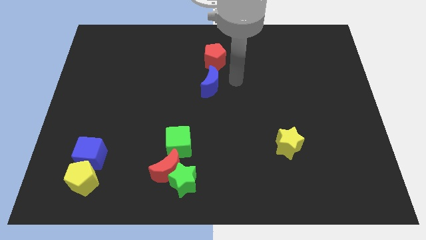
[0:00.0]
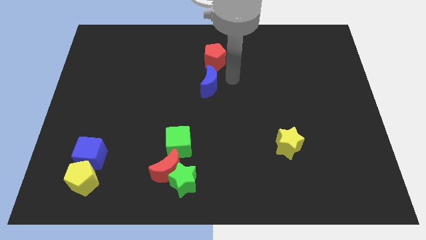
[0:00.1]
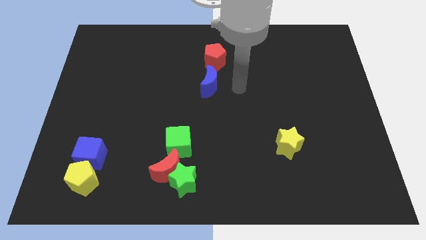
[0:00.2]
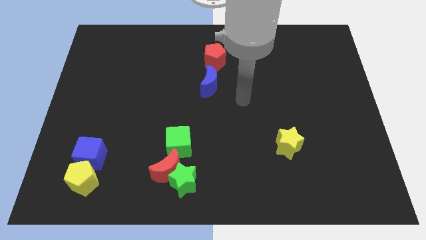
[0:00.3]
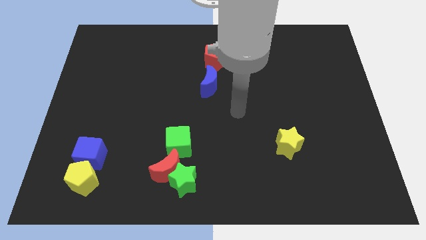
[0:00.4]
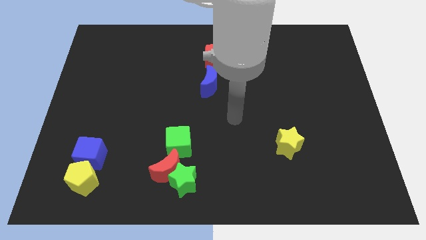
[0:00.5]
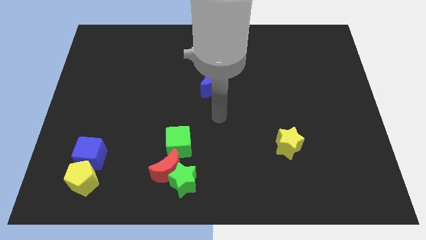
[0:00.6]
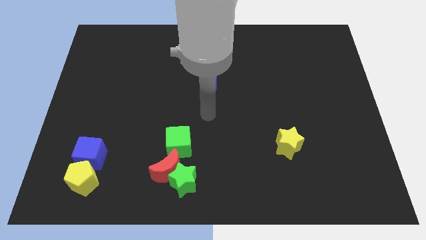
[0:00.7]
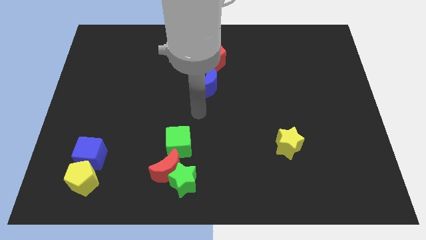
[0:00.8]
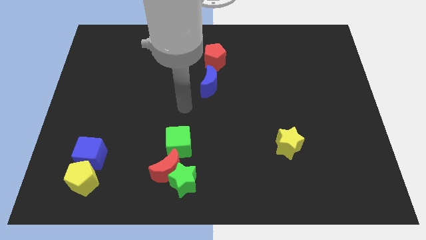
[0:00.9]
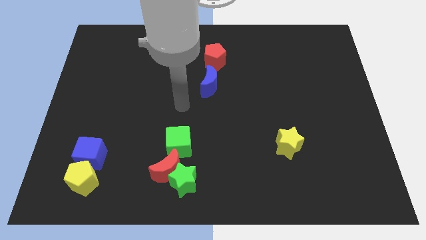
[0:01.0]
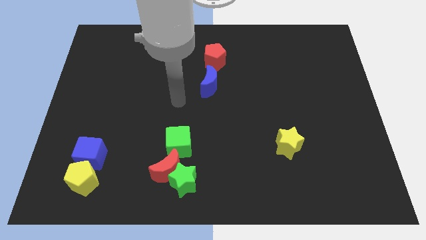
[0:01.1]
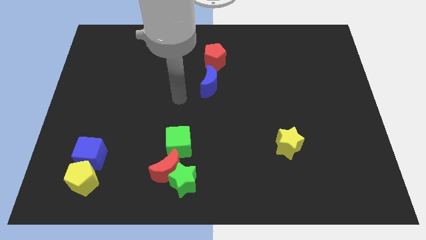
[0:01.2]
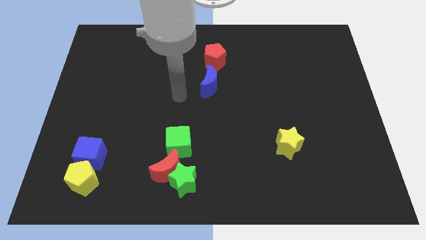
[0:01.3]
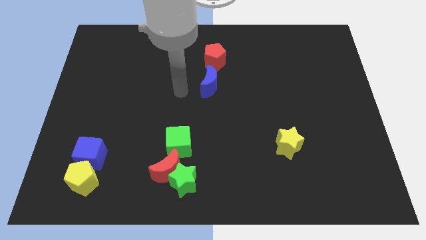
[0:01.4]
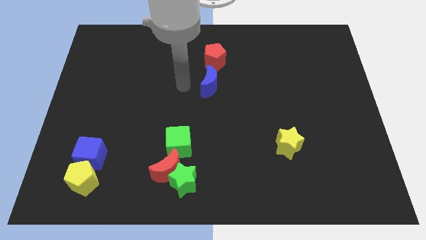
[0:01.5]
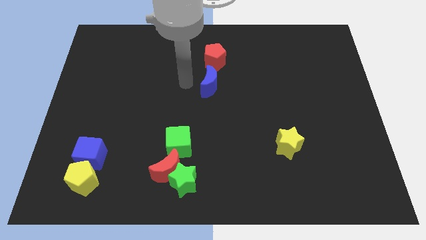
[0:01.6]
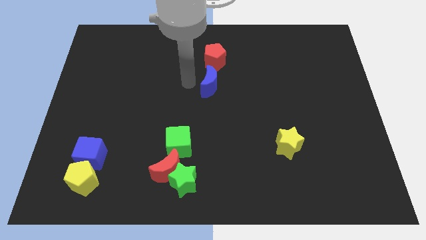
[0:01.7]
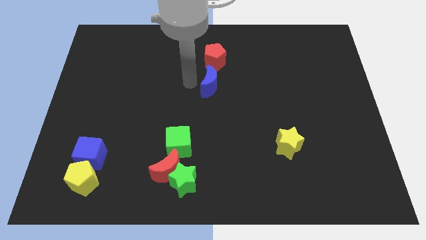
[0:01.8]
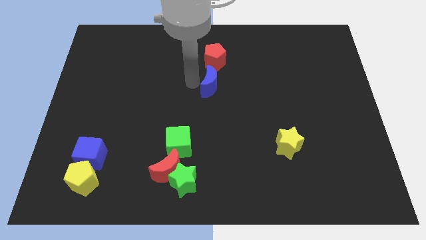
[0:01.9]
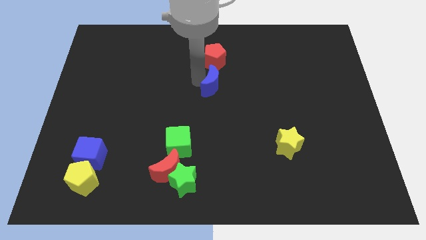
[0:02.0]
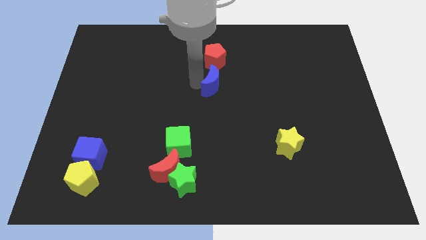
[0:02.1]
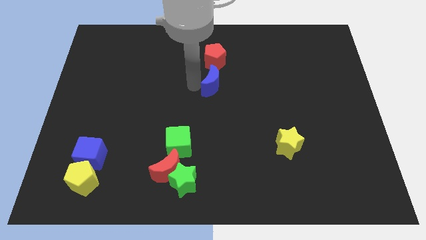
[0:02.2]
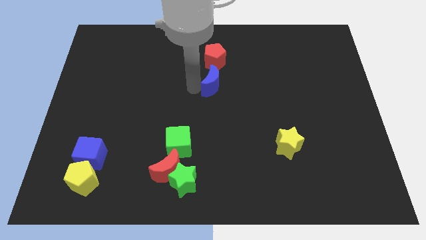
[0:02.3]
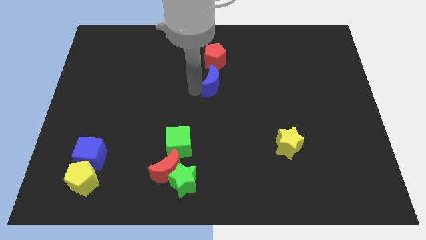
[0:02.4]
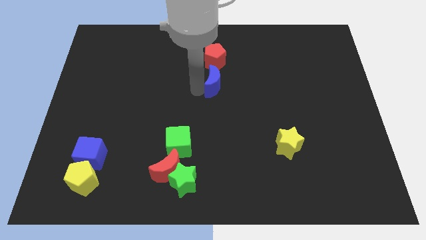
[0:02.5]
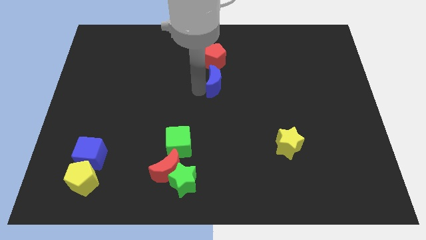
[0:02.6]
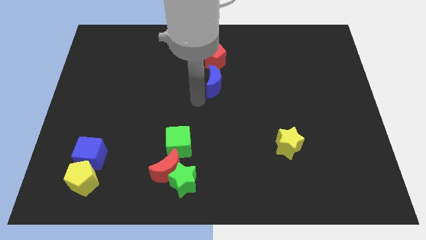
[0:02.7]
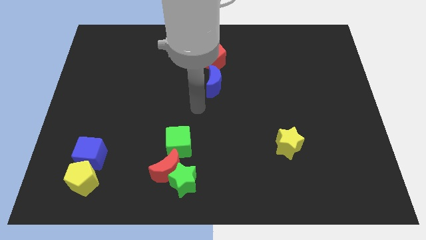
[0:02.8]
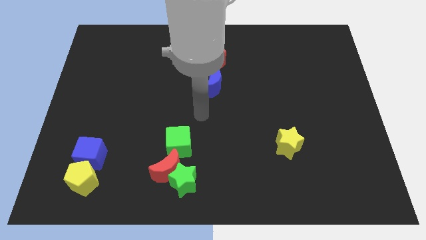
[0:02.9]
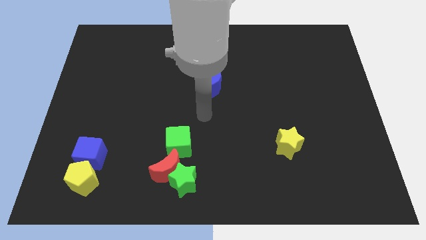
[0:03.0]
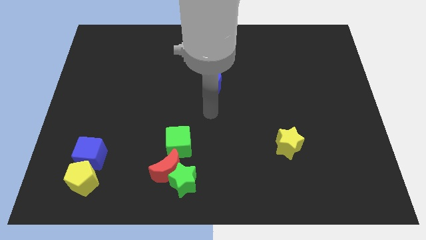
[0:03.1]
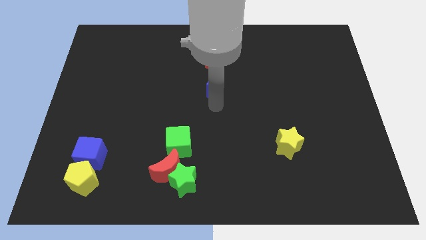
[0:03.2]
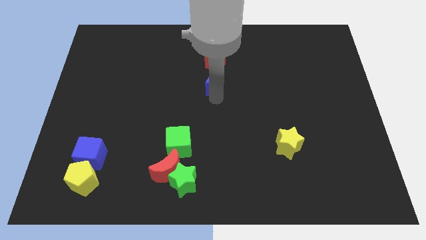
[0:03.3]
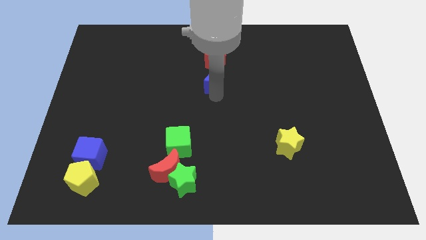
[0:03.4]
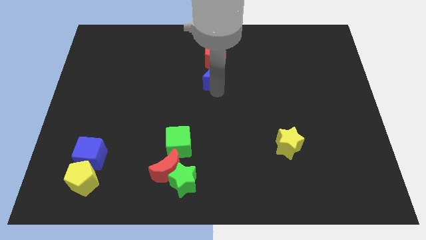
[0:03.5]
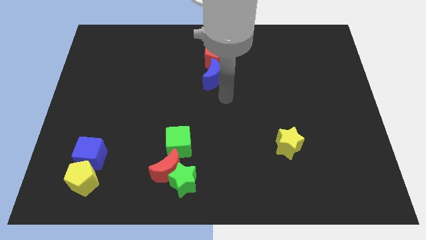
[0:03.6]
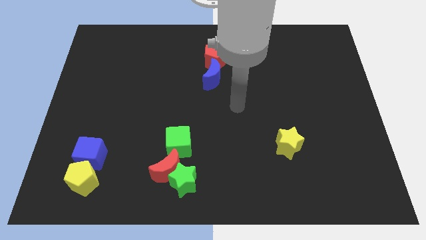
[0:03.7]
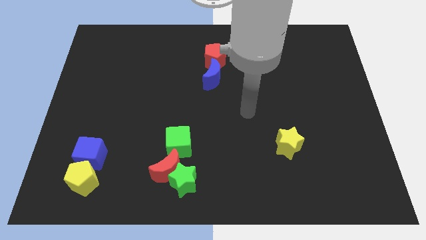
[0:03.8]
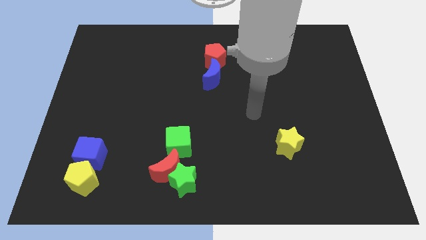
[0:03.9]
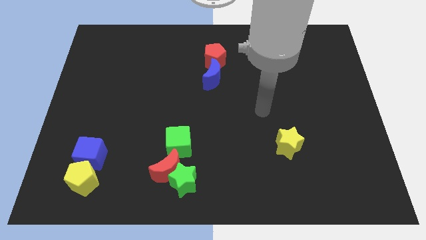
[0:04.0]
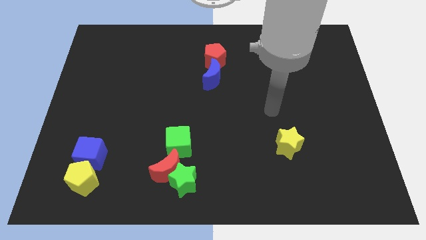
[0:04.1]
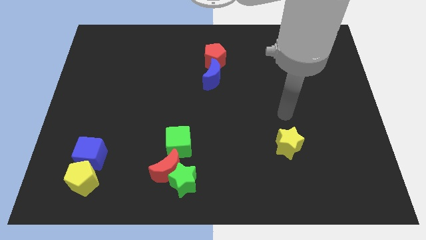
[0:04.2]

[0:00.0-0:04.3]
push blue moon into red pentagon

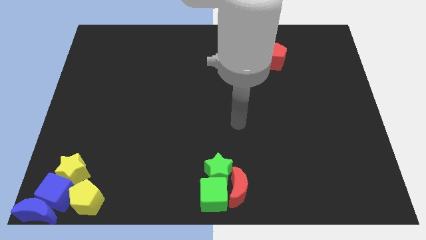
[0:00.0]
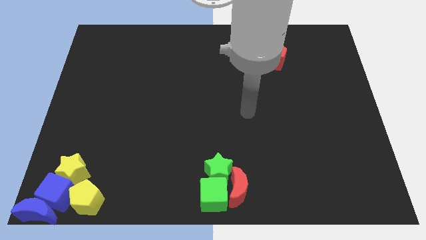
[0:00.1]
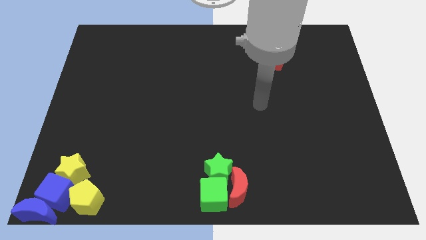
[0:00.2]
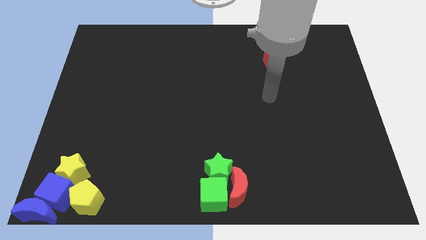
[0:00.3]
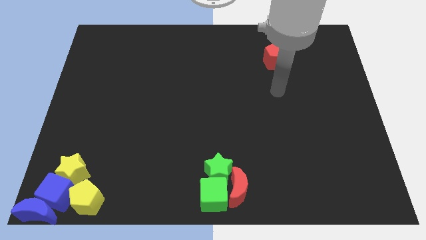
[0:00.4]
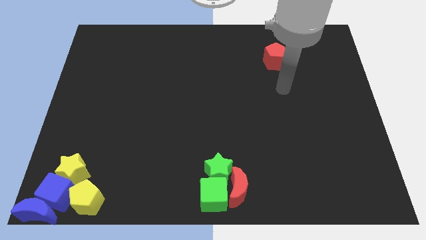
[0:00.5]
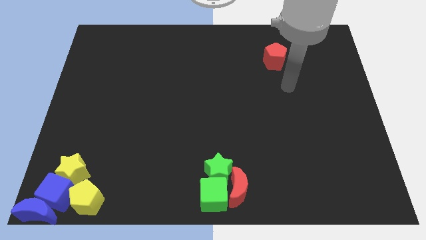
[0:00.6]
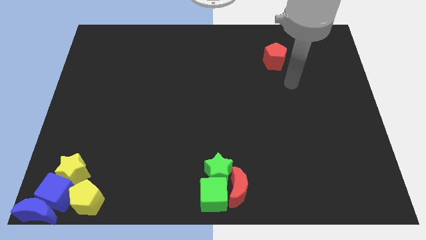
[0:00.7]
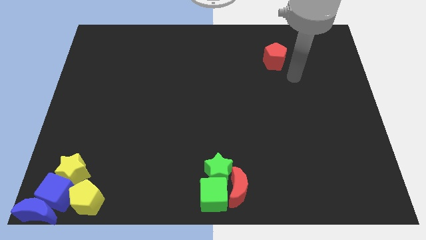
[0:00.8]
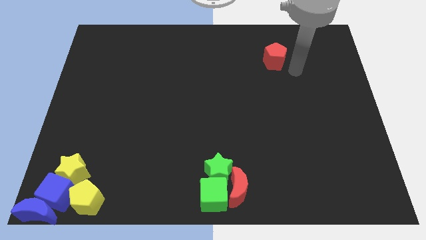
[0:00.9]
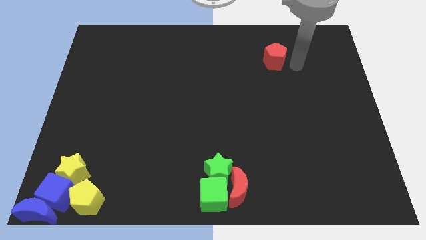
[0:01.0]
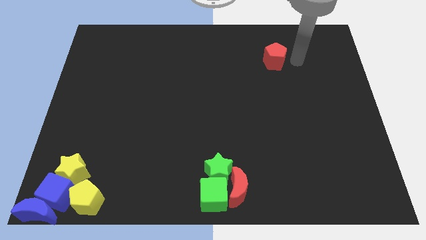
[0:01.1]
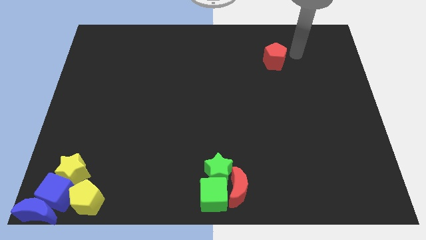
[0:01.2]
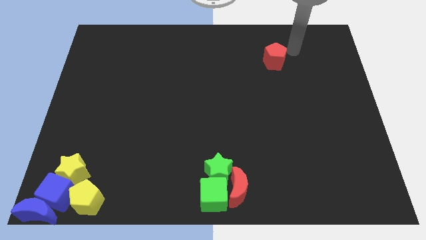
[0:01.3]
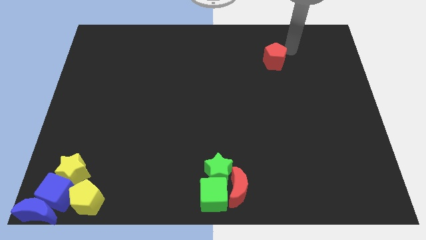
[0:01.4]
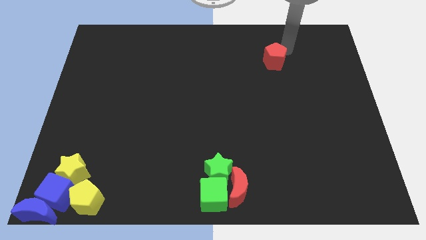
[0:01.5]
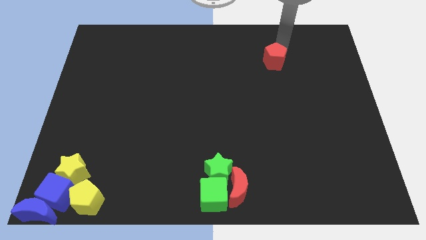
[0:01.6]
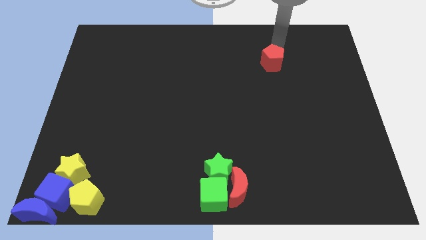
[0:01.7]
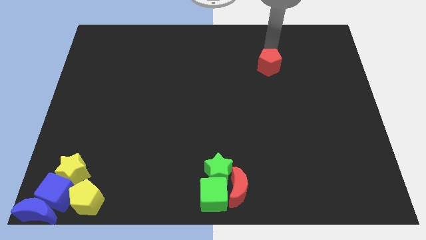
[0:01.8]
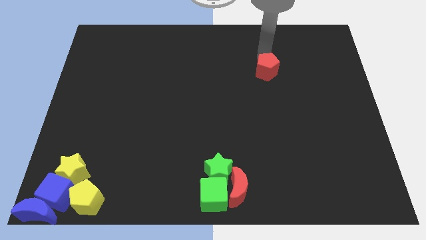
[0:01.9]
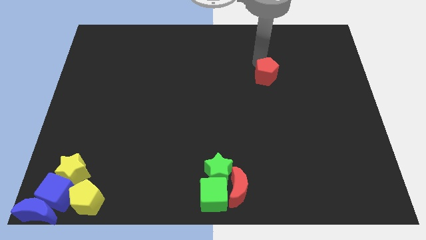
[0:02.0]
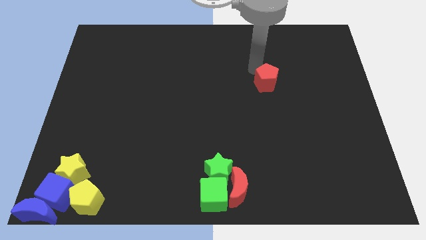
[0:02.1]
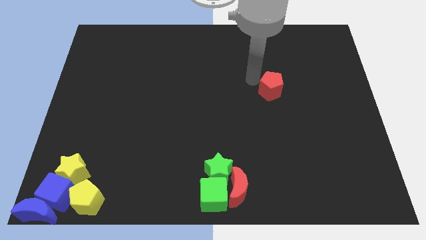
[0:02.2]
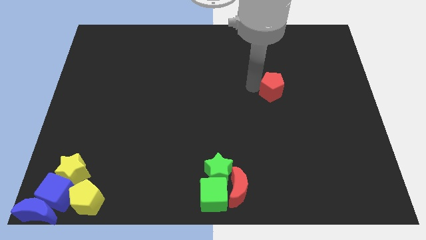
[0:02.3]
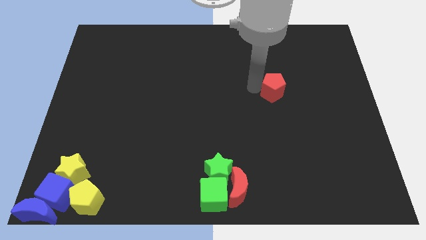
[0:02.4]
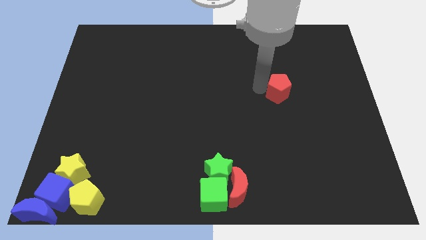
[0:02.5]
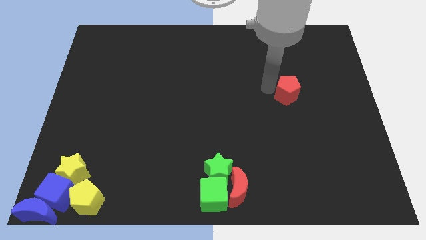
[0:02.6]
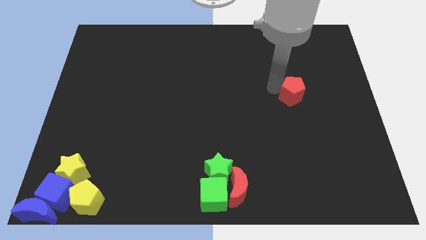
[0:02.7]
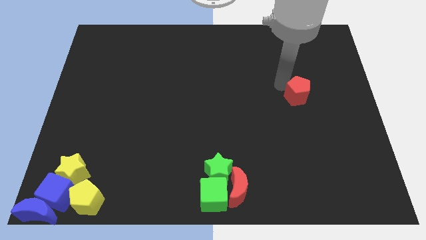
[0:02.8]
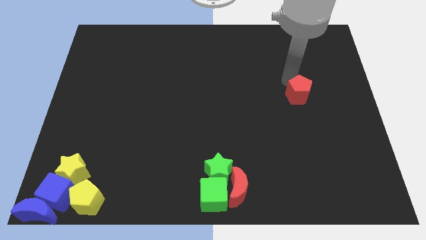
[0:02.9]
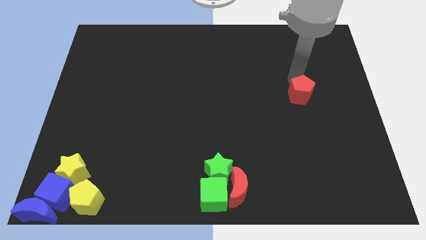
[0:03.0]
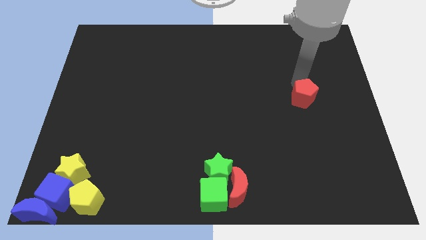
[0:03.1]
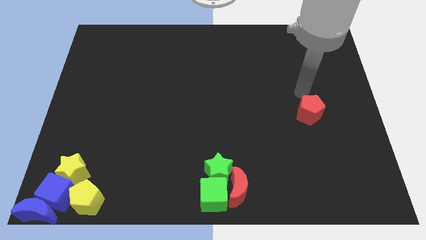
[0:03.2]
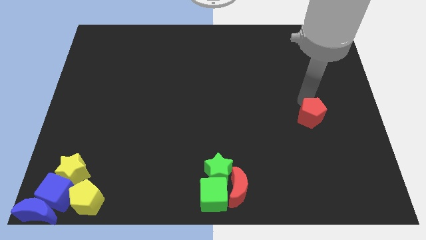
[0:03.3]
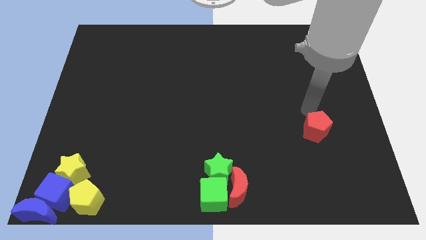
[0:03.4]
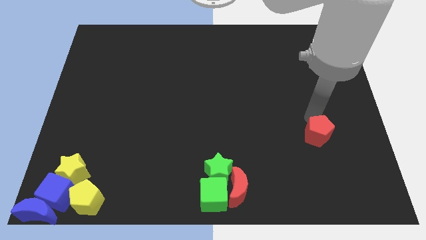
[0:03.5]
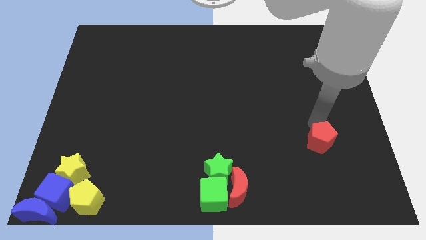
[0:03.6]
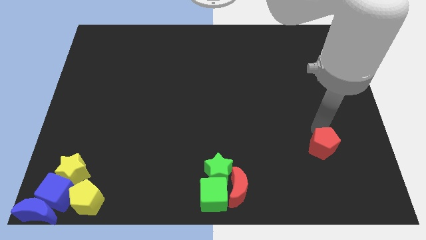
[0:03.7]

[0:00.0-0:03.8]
move the red pentagon towards the bottom

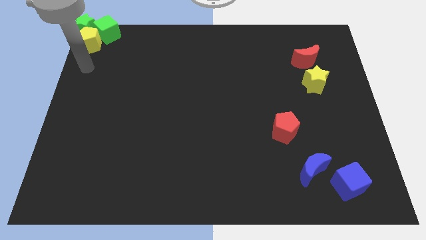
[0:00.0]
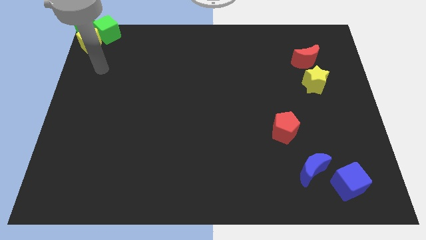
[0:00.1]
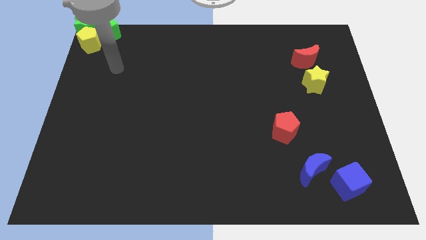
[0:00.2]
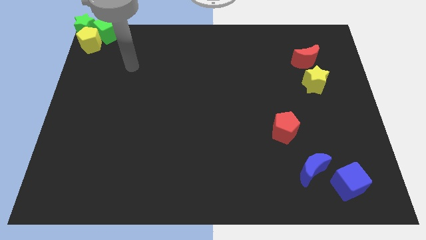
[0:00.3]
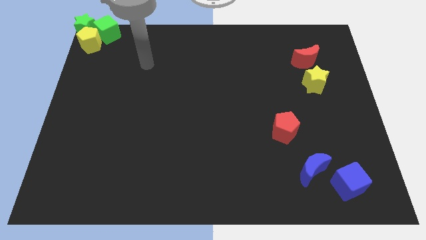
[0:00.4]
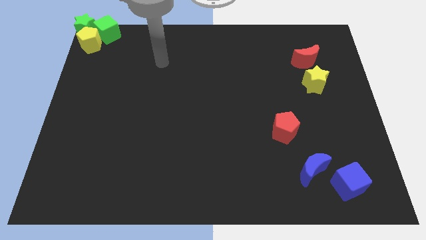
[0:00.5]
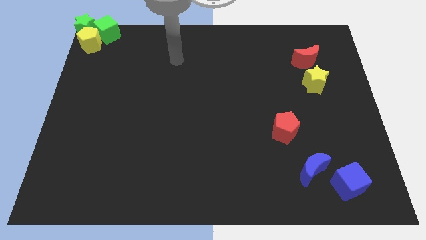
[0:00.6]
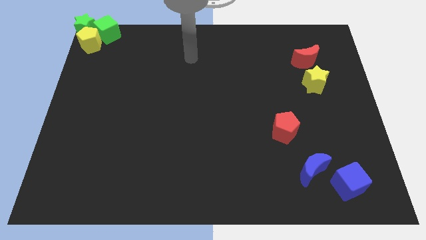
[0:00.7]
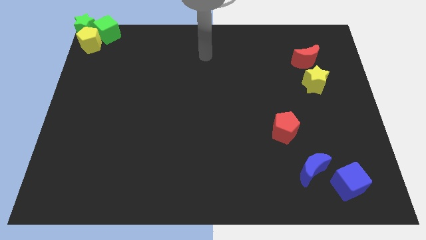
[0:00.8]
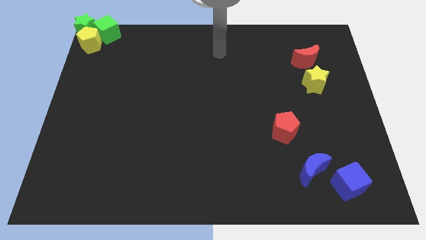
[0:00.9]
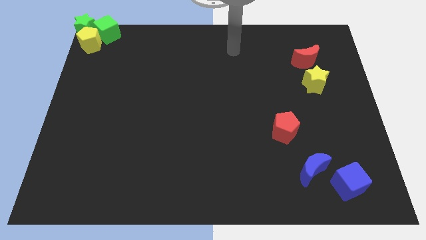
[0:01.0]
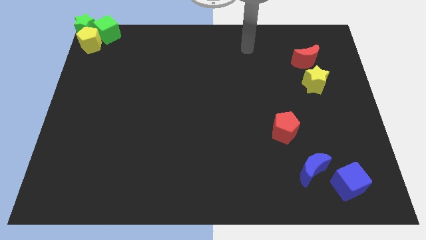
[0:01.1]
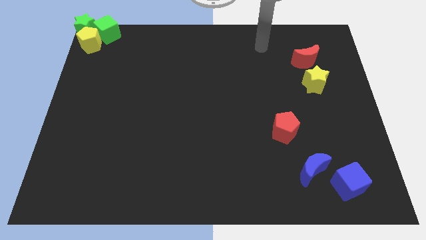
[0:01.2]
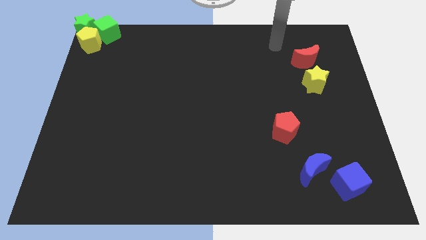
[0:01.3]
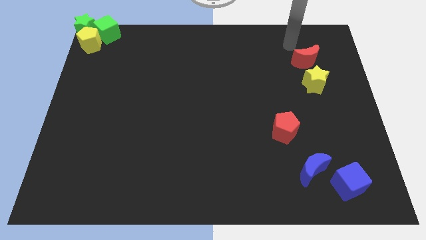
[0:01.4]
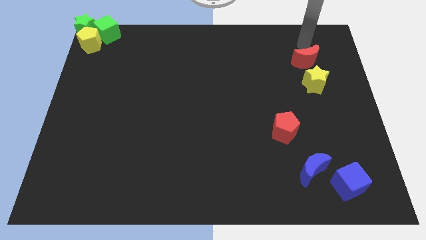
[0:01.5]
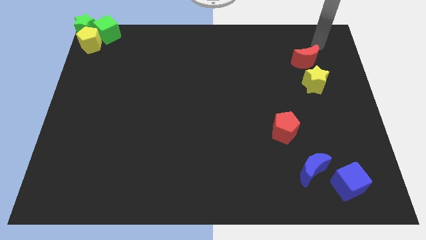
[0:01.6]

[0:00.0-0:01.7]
point your hand above the red moon
